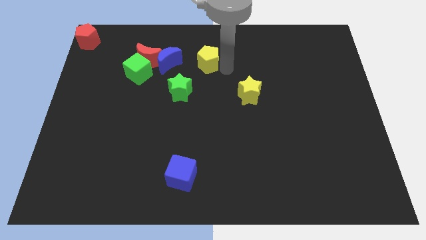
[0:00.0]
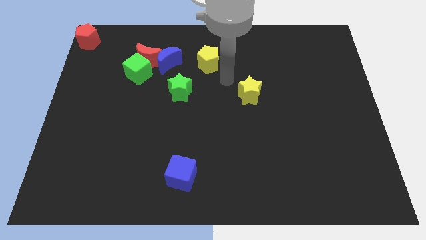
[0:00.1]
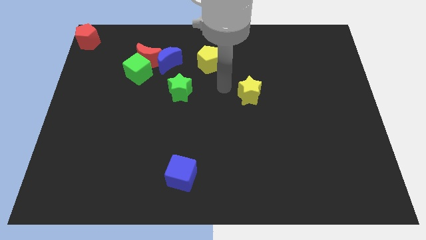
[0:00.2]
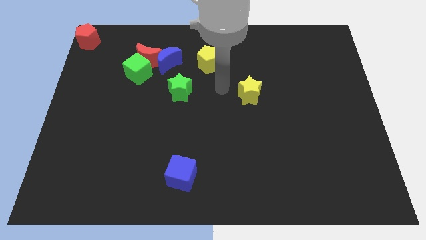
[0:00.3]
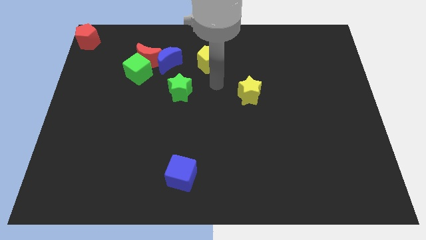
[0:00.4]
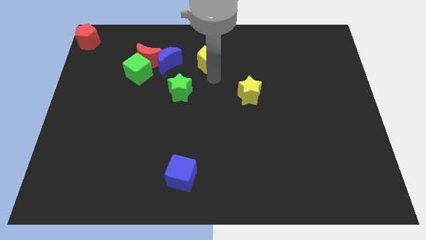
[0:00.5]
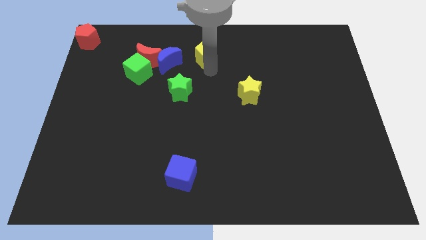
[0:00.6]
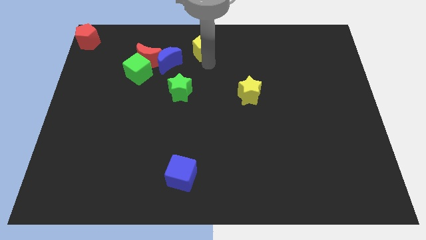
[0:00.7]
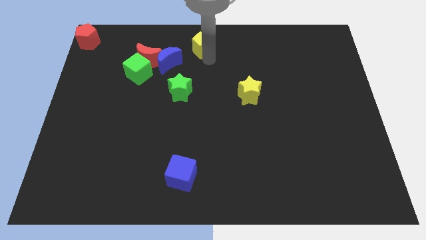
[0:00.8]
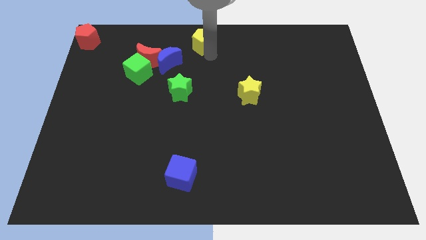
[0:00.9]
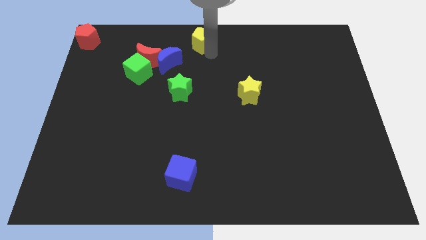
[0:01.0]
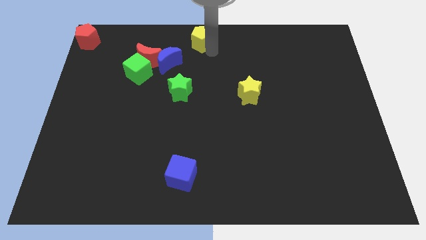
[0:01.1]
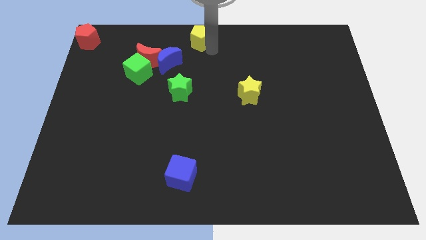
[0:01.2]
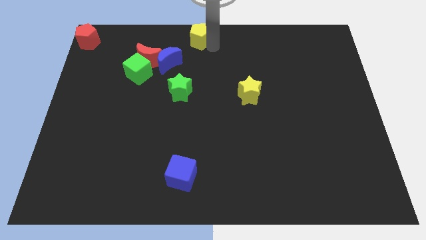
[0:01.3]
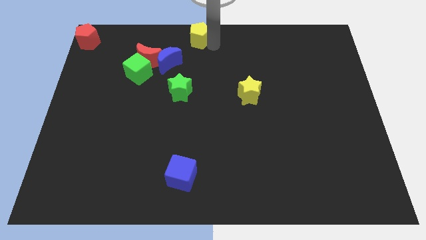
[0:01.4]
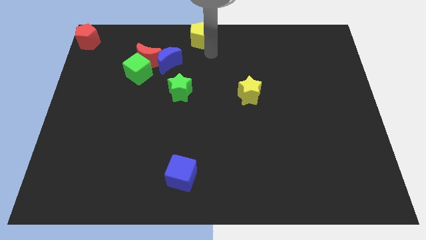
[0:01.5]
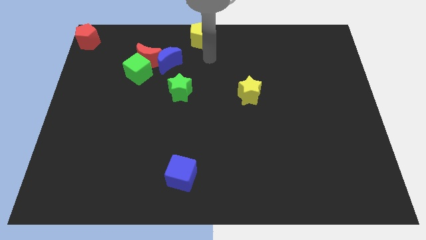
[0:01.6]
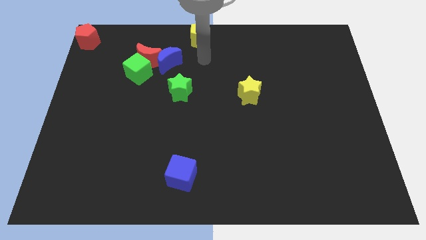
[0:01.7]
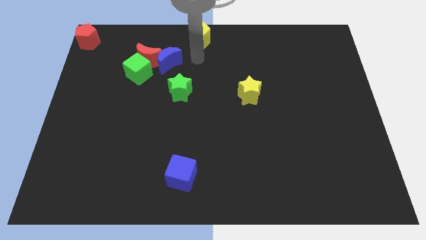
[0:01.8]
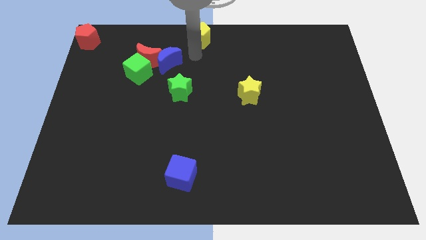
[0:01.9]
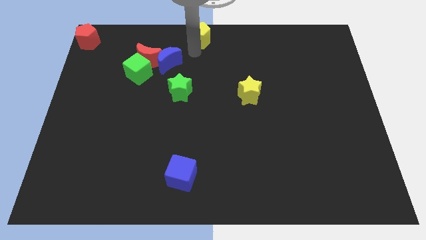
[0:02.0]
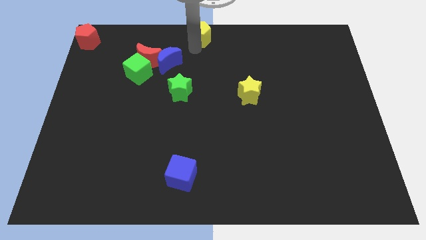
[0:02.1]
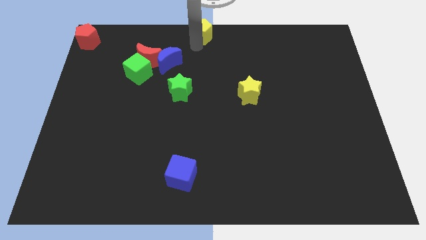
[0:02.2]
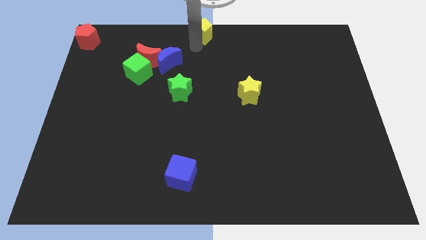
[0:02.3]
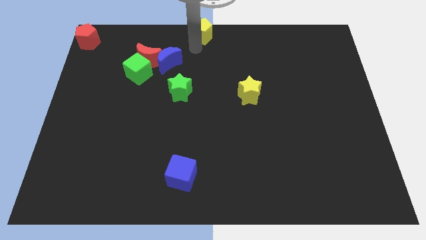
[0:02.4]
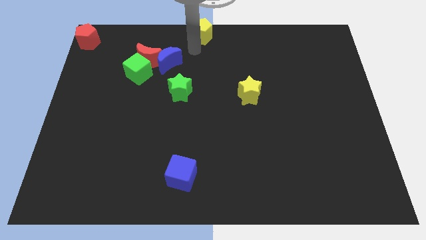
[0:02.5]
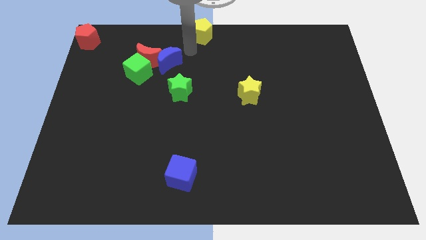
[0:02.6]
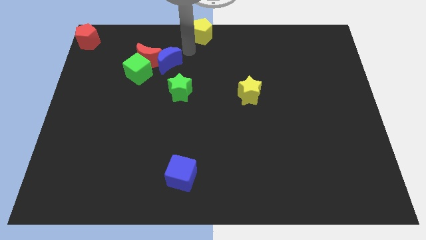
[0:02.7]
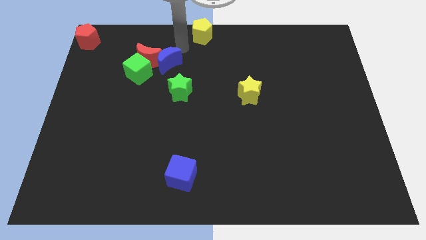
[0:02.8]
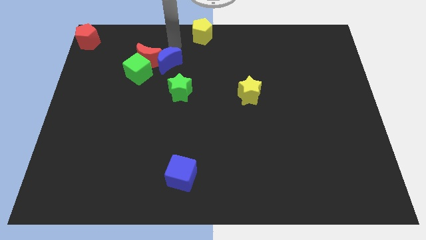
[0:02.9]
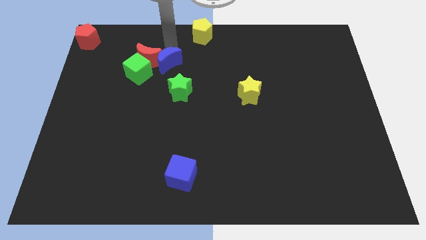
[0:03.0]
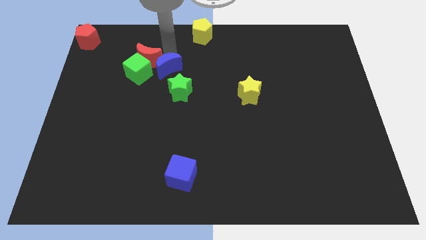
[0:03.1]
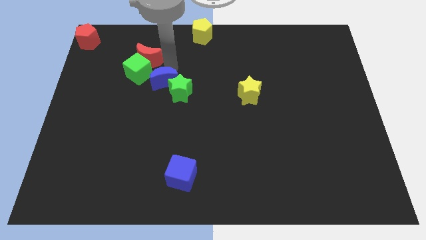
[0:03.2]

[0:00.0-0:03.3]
move the yellow pentagon to the top center of the board

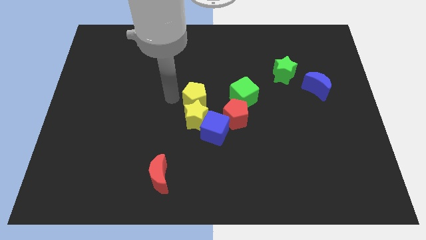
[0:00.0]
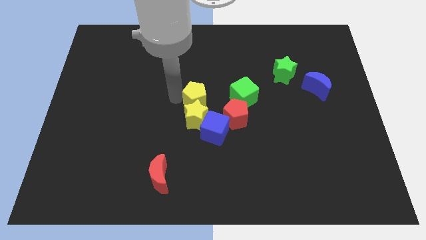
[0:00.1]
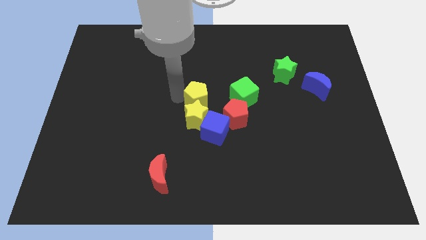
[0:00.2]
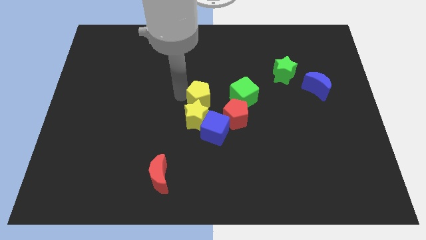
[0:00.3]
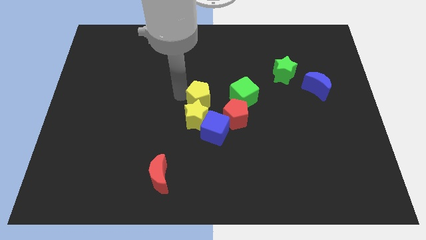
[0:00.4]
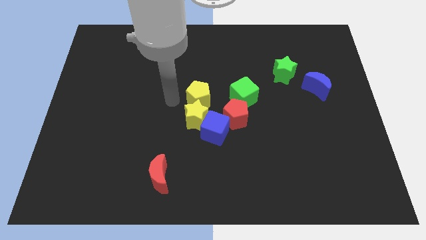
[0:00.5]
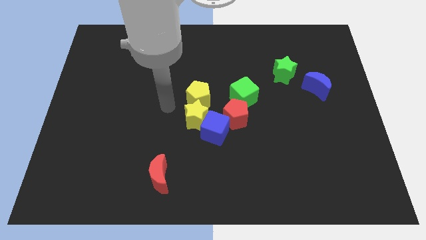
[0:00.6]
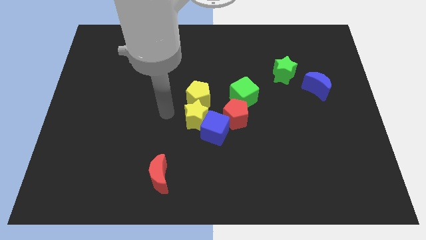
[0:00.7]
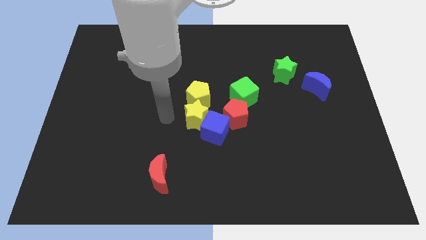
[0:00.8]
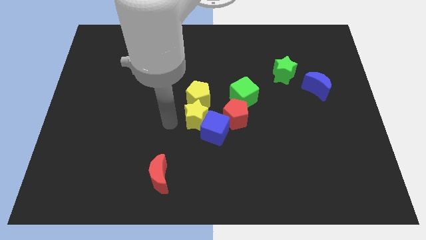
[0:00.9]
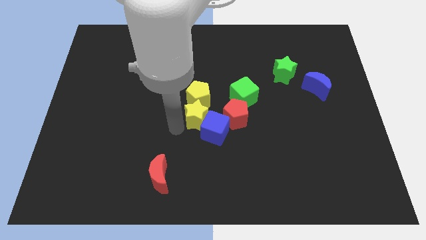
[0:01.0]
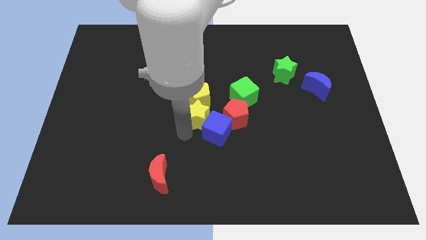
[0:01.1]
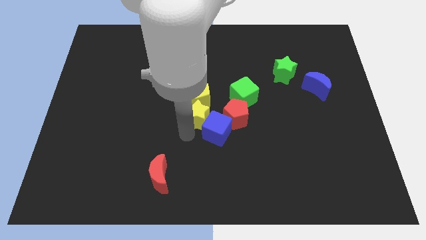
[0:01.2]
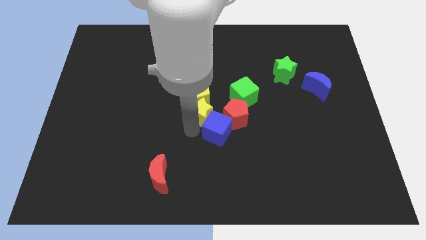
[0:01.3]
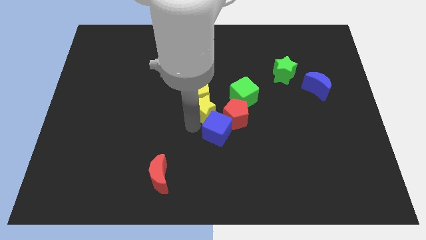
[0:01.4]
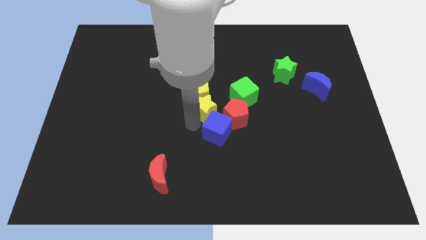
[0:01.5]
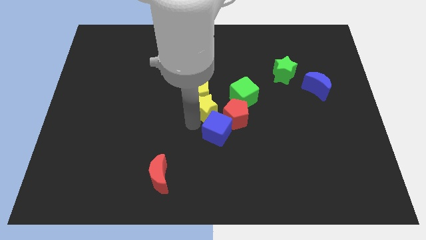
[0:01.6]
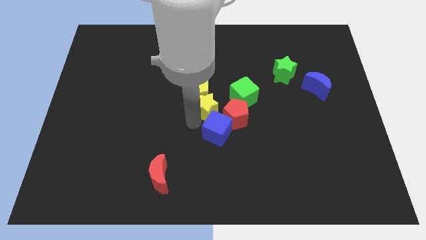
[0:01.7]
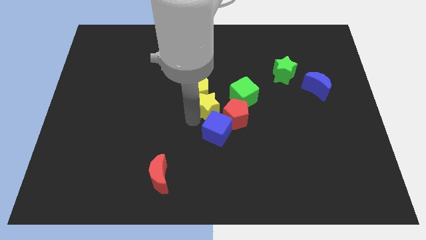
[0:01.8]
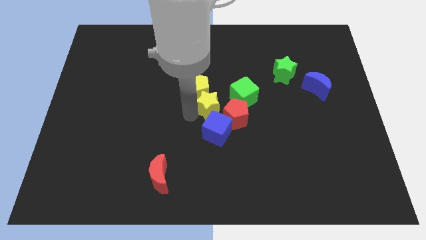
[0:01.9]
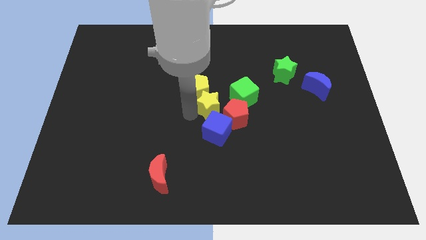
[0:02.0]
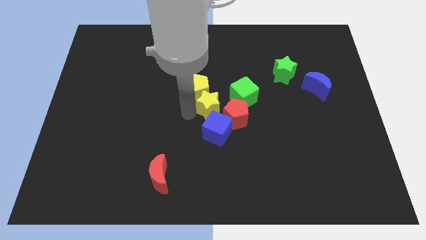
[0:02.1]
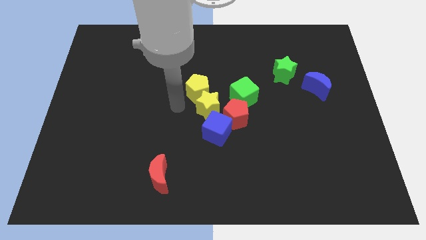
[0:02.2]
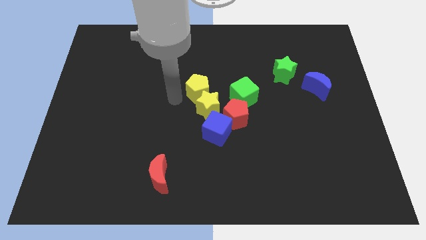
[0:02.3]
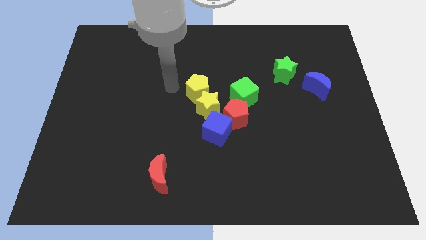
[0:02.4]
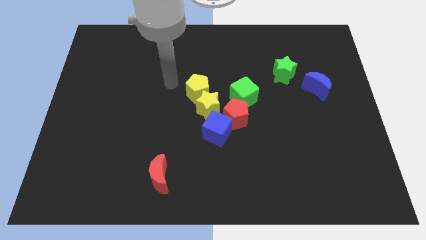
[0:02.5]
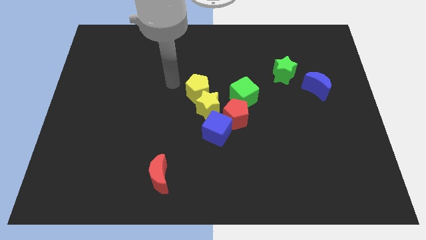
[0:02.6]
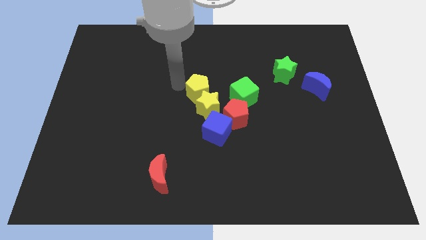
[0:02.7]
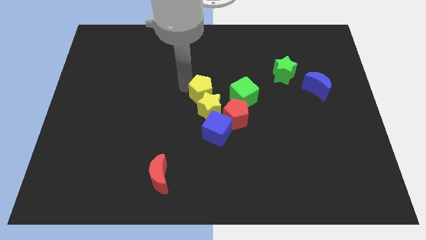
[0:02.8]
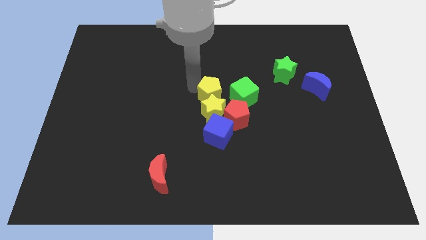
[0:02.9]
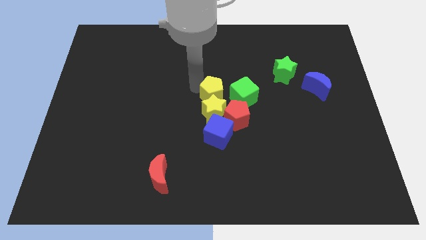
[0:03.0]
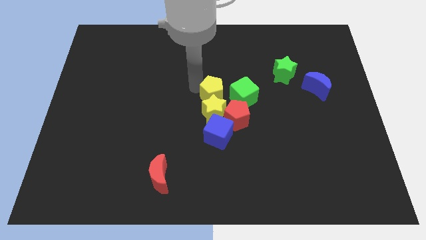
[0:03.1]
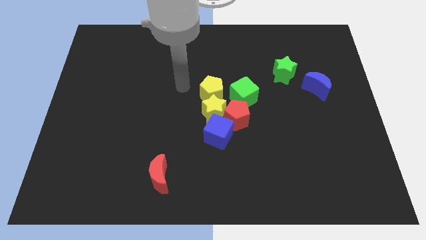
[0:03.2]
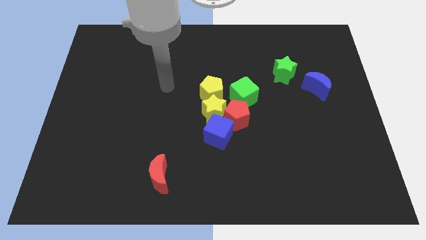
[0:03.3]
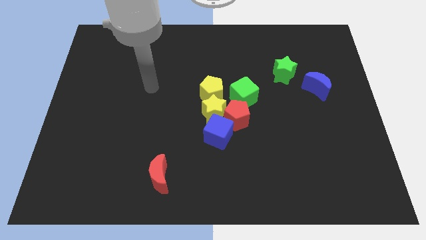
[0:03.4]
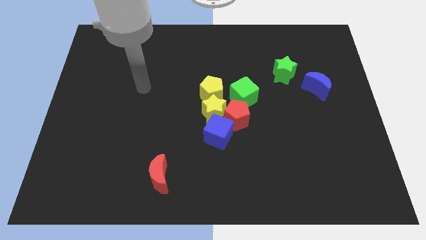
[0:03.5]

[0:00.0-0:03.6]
push the yellow blocks into the red pentagon

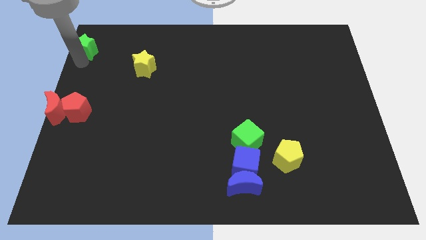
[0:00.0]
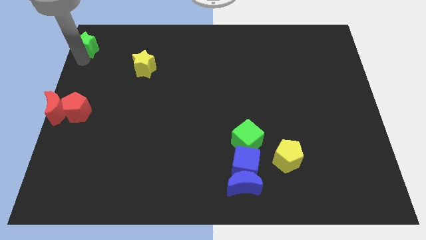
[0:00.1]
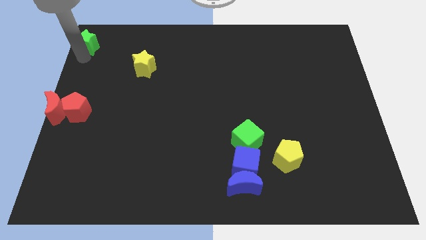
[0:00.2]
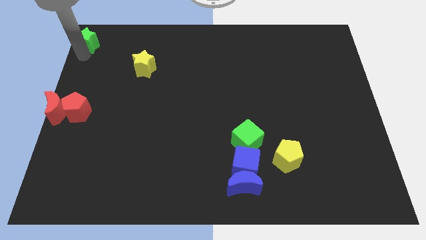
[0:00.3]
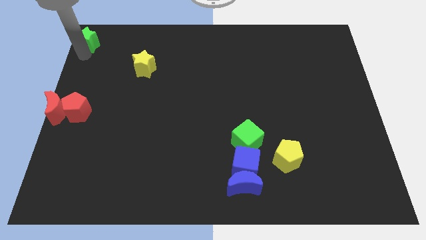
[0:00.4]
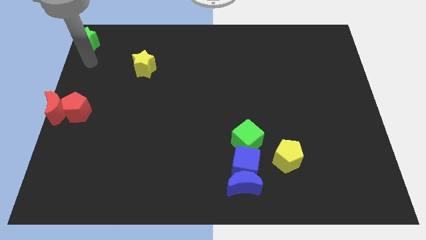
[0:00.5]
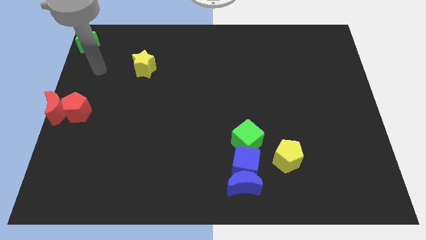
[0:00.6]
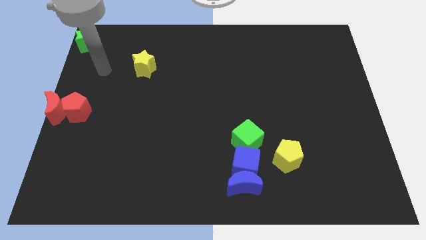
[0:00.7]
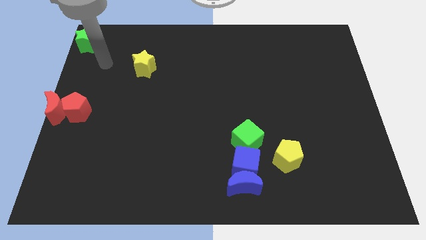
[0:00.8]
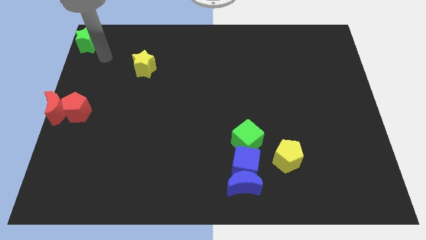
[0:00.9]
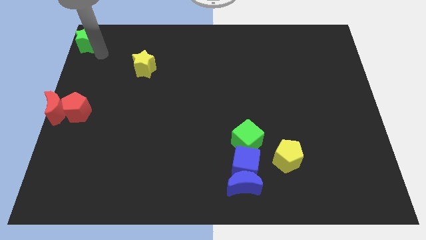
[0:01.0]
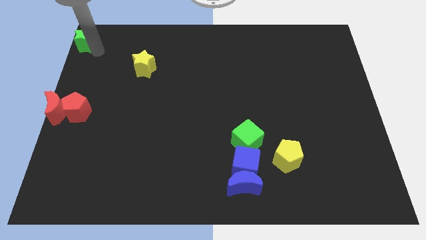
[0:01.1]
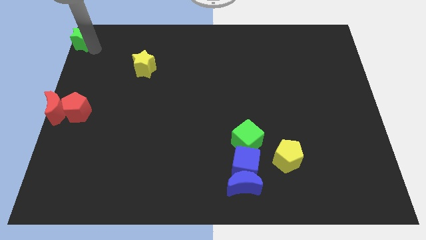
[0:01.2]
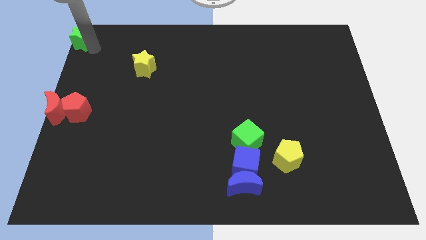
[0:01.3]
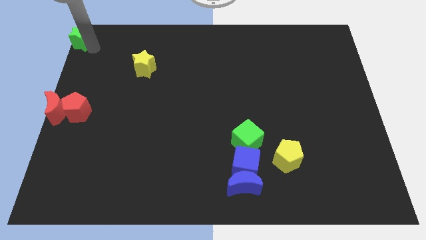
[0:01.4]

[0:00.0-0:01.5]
move the green star to the top left

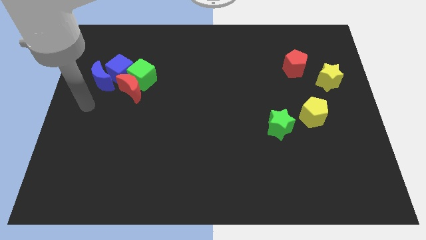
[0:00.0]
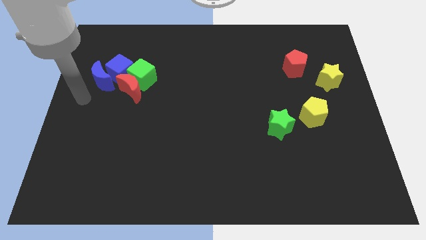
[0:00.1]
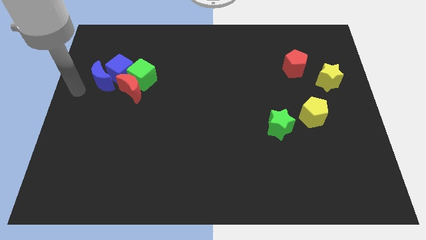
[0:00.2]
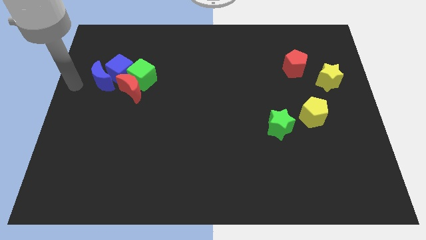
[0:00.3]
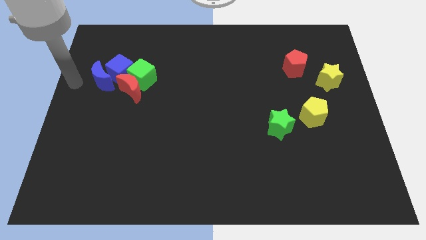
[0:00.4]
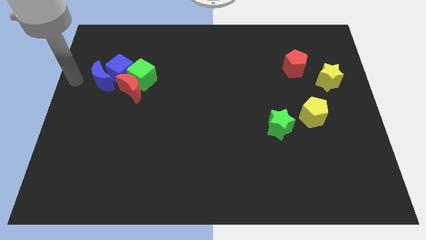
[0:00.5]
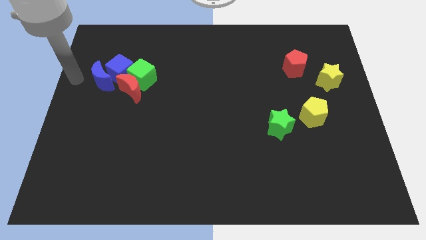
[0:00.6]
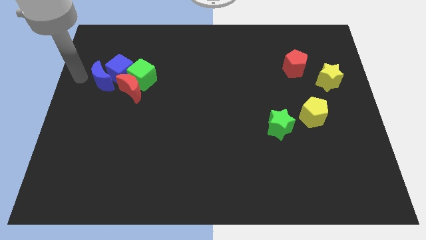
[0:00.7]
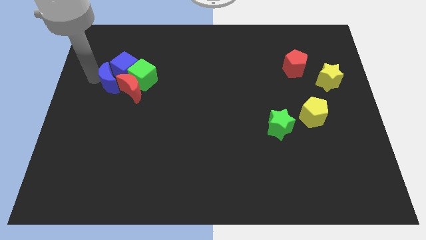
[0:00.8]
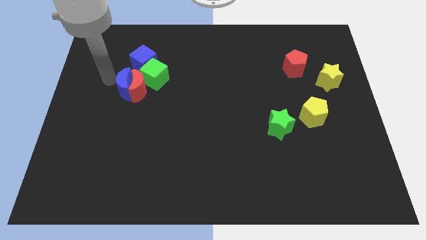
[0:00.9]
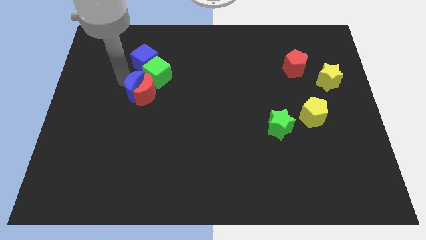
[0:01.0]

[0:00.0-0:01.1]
push the blue crescent into the red crescent
